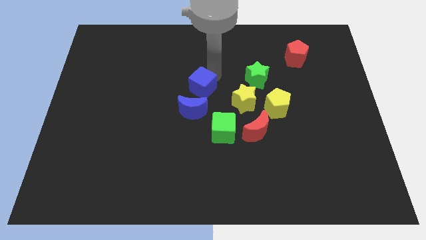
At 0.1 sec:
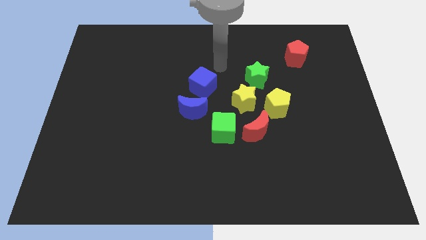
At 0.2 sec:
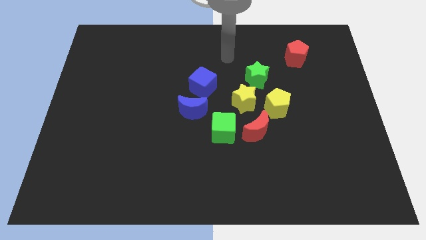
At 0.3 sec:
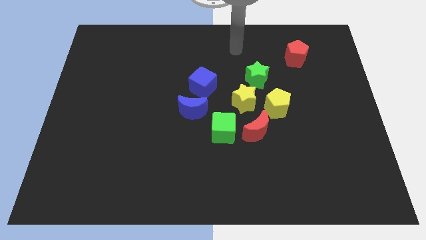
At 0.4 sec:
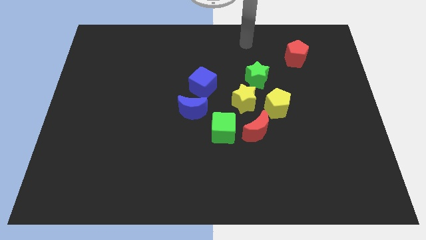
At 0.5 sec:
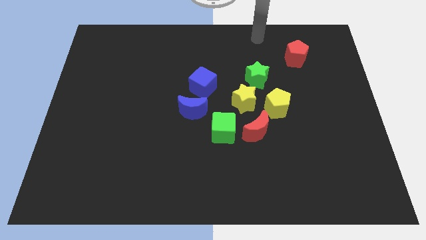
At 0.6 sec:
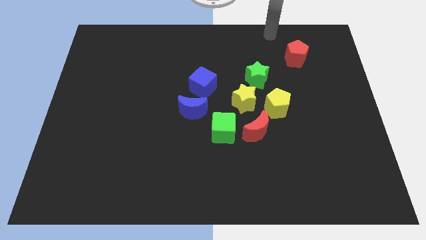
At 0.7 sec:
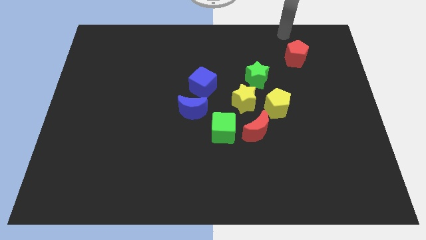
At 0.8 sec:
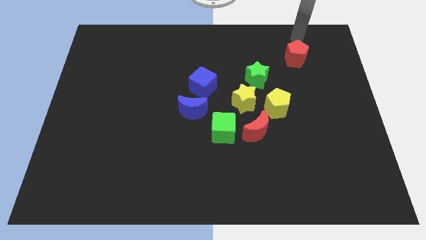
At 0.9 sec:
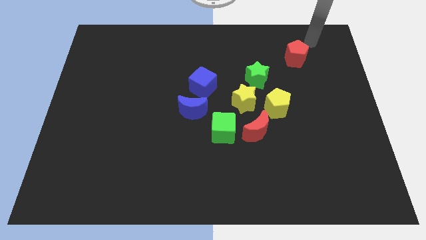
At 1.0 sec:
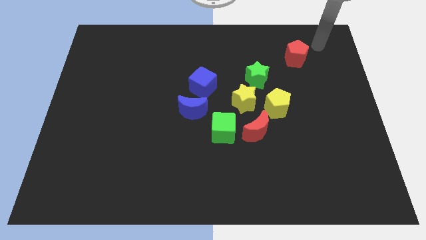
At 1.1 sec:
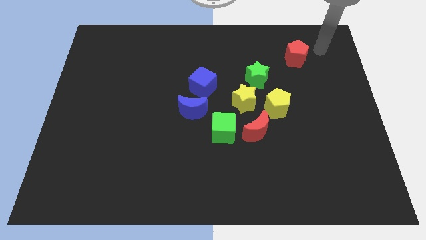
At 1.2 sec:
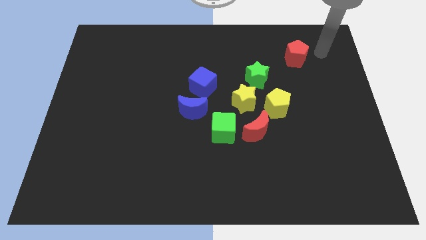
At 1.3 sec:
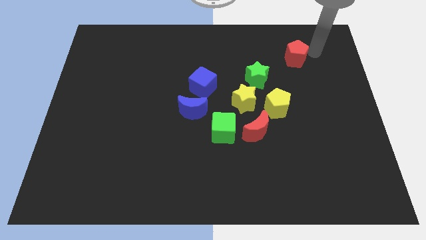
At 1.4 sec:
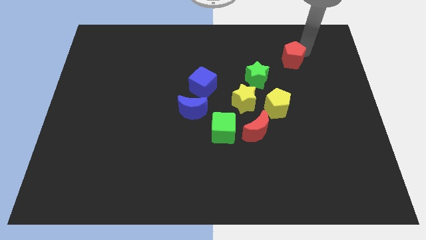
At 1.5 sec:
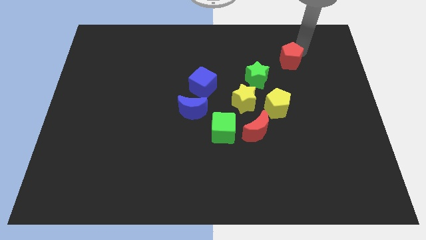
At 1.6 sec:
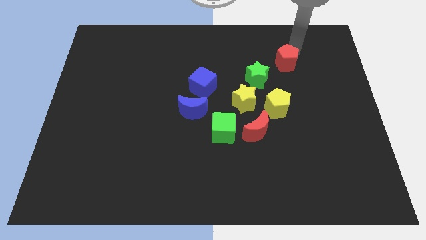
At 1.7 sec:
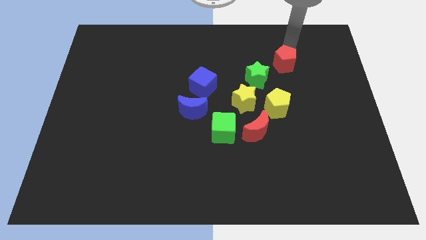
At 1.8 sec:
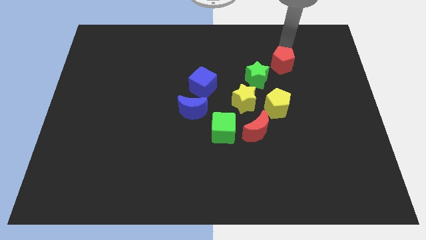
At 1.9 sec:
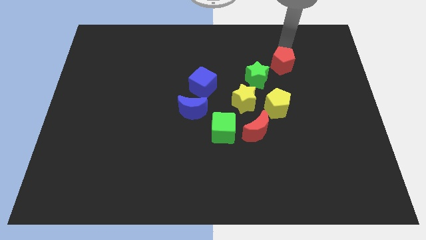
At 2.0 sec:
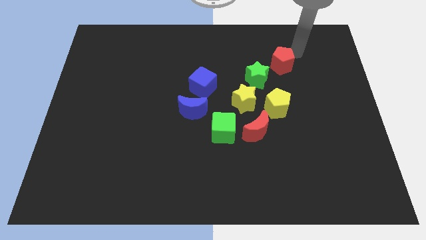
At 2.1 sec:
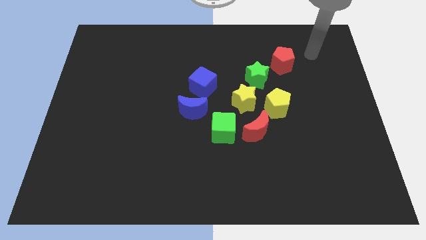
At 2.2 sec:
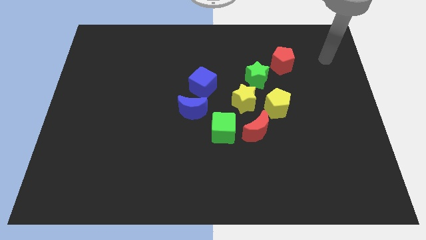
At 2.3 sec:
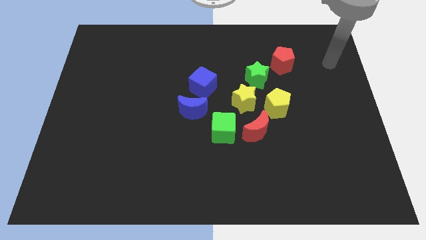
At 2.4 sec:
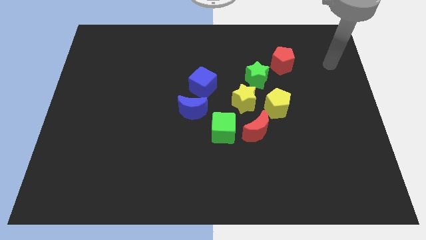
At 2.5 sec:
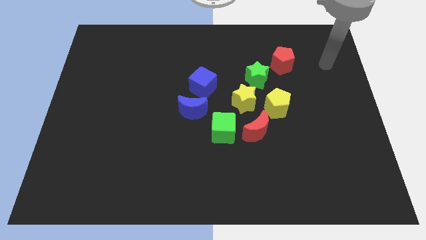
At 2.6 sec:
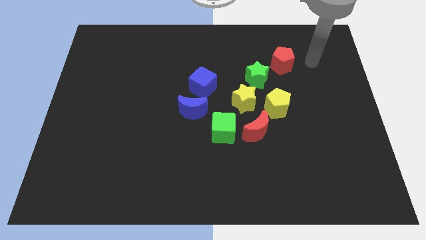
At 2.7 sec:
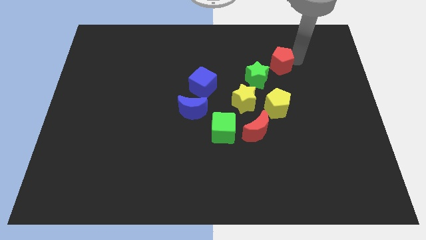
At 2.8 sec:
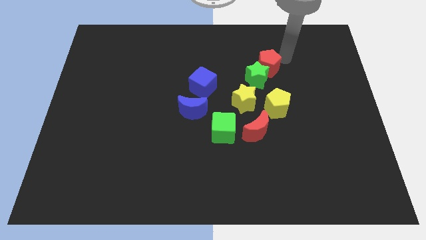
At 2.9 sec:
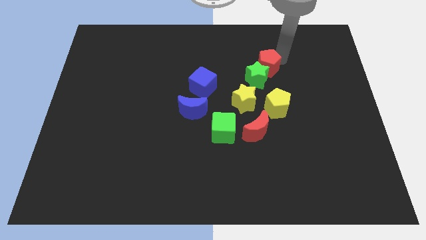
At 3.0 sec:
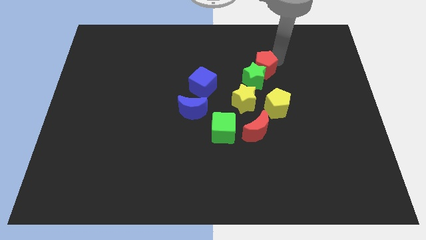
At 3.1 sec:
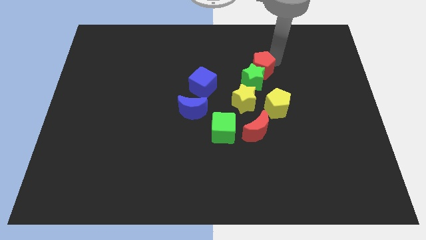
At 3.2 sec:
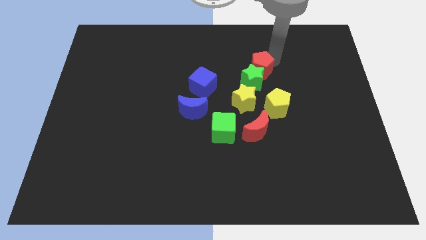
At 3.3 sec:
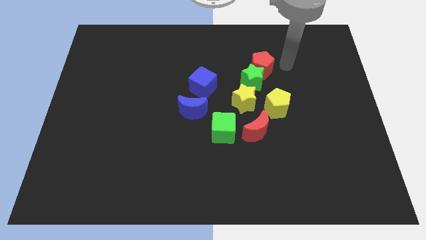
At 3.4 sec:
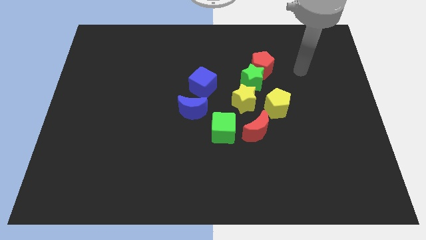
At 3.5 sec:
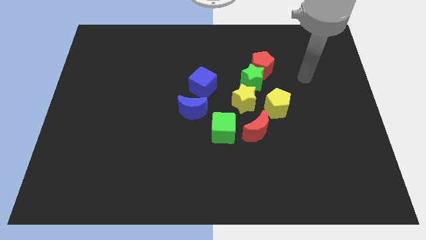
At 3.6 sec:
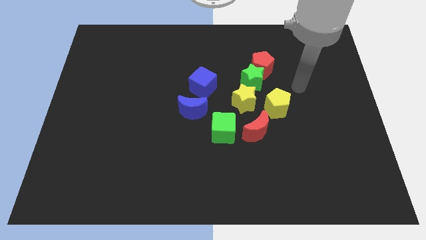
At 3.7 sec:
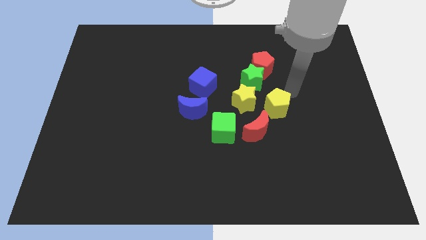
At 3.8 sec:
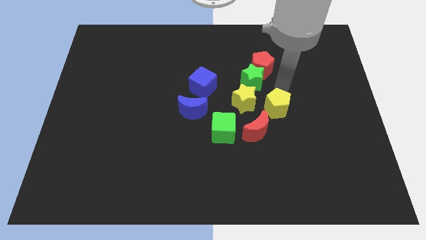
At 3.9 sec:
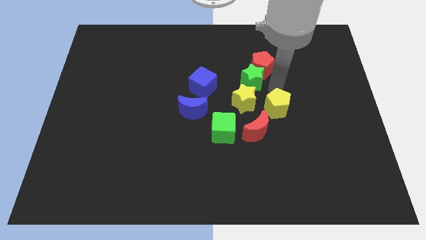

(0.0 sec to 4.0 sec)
push the red pentagon towards the green star

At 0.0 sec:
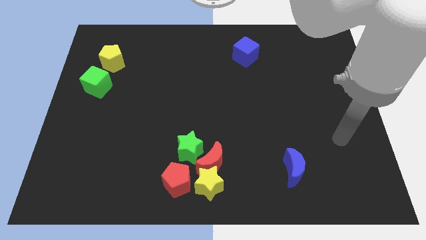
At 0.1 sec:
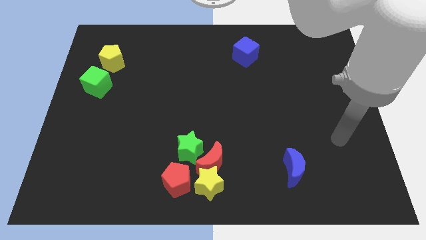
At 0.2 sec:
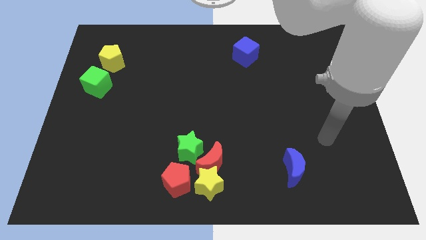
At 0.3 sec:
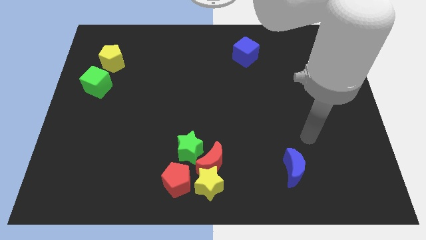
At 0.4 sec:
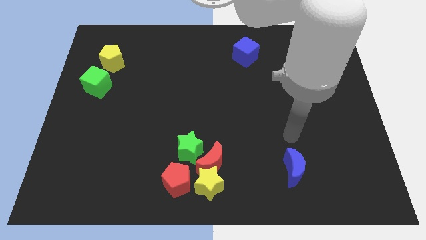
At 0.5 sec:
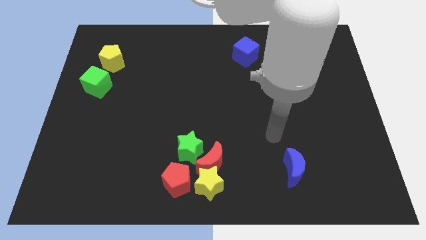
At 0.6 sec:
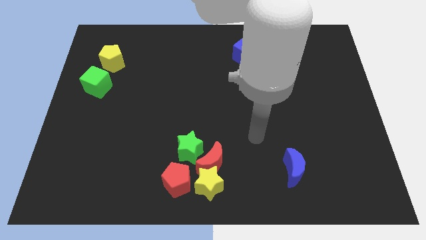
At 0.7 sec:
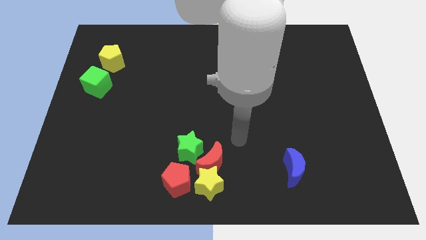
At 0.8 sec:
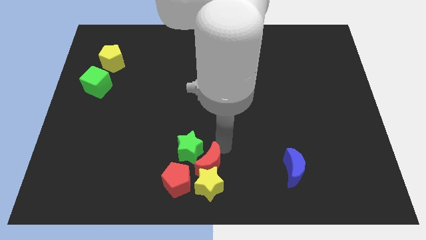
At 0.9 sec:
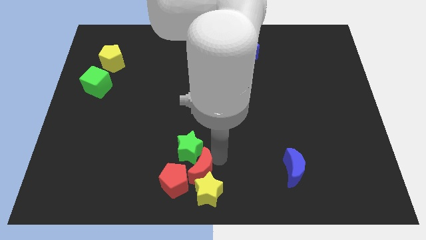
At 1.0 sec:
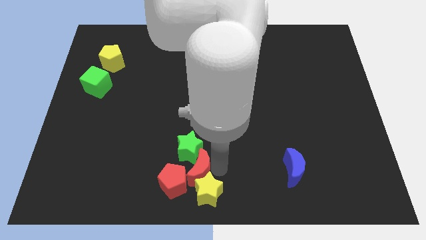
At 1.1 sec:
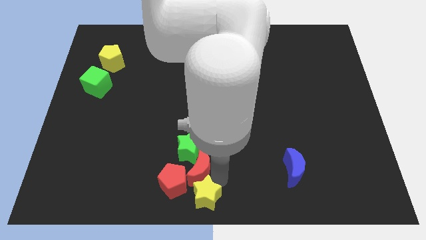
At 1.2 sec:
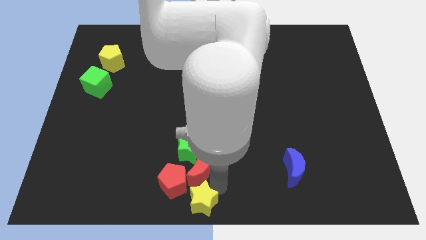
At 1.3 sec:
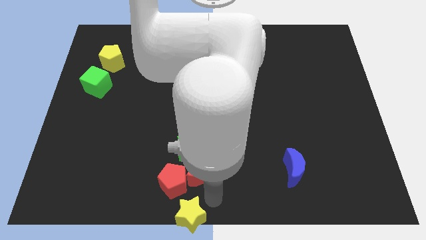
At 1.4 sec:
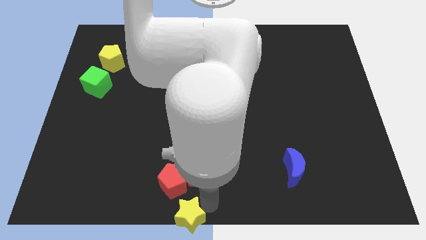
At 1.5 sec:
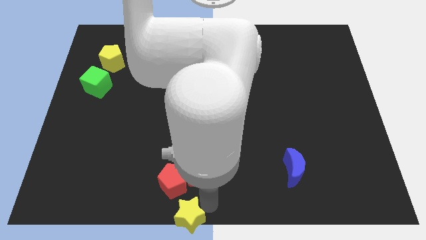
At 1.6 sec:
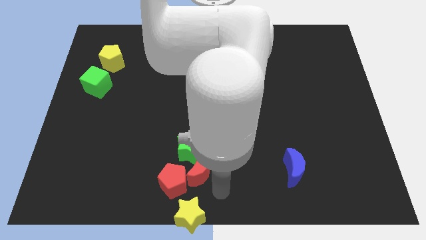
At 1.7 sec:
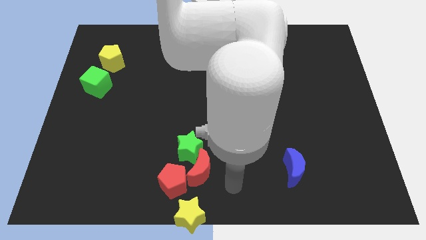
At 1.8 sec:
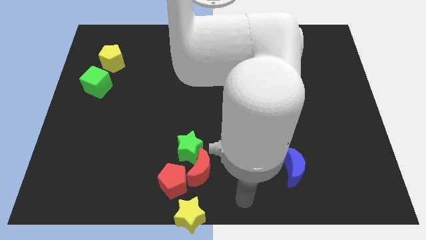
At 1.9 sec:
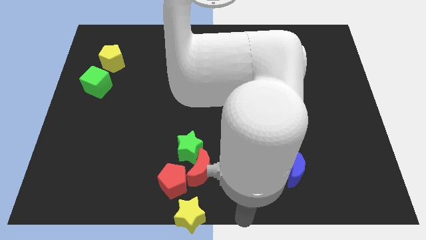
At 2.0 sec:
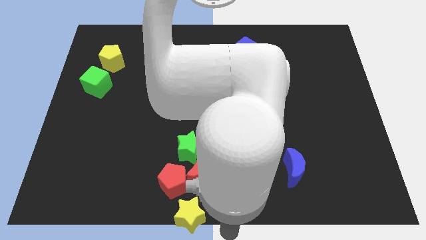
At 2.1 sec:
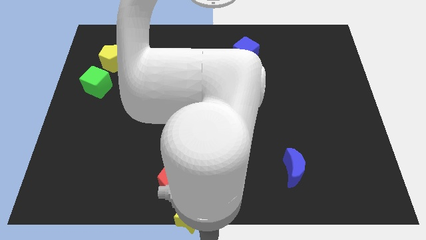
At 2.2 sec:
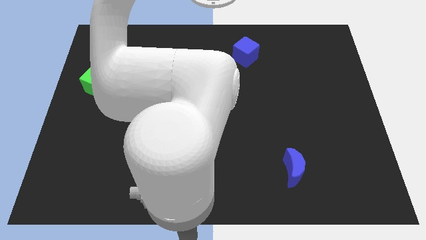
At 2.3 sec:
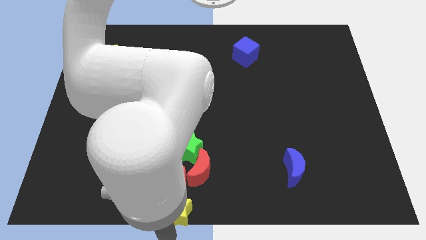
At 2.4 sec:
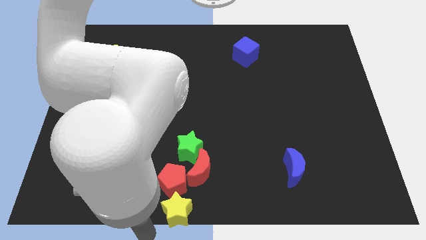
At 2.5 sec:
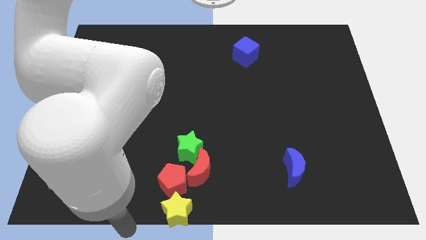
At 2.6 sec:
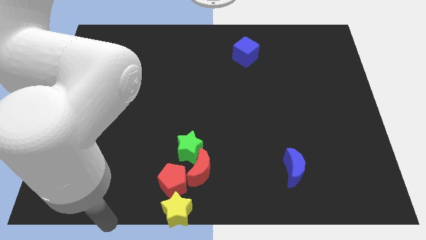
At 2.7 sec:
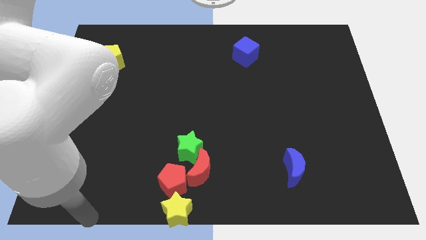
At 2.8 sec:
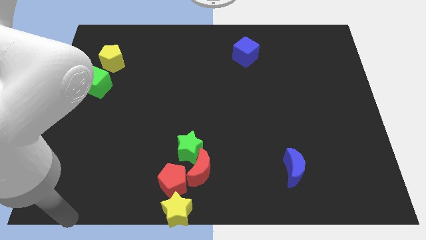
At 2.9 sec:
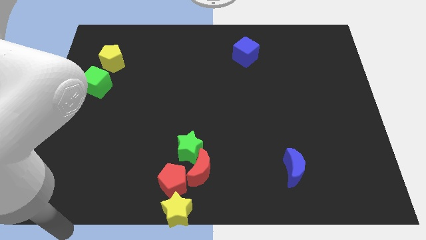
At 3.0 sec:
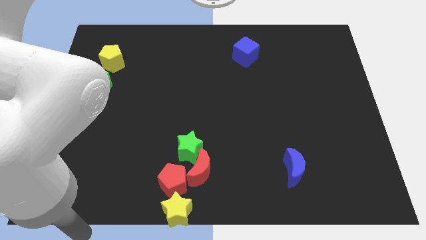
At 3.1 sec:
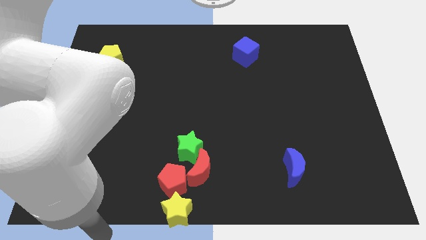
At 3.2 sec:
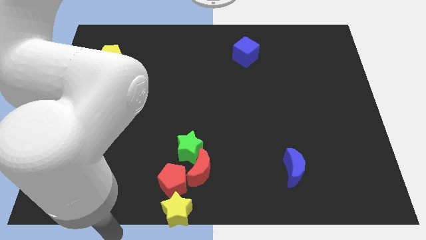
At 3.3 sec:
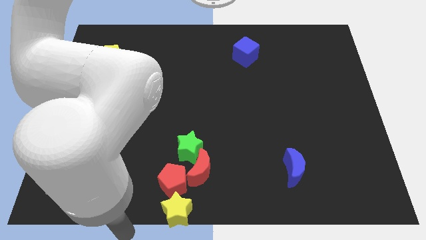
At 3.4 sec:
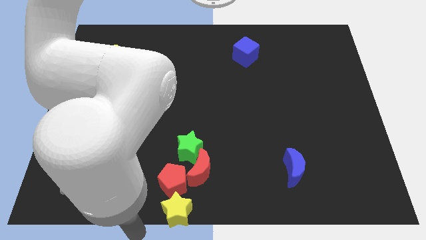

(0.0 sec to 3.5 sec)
push yellow star downwards

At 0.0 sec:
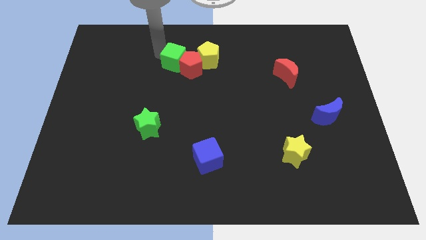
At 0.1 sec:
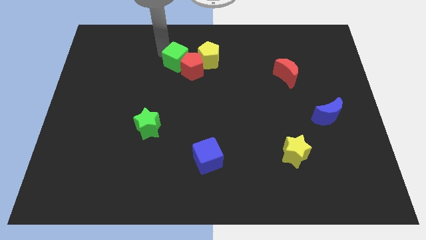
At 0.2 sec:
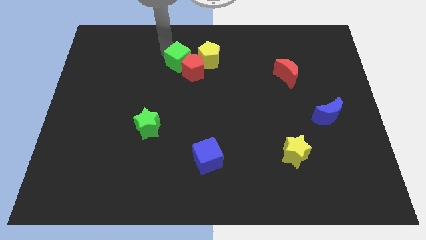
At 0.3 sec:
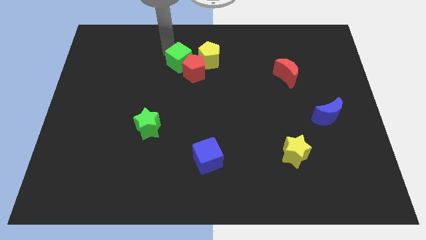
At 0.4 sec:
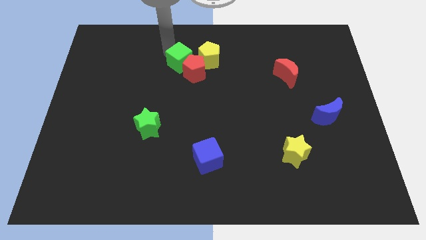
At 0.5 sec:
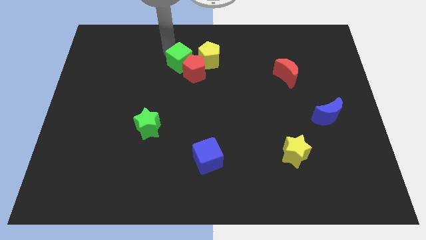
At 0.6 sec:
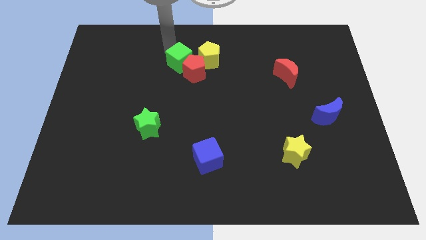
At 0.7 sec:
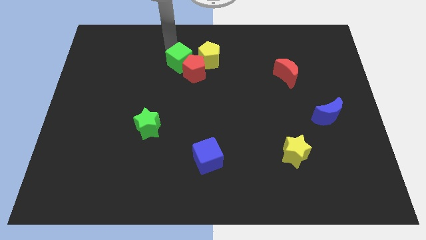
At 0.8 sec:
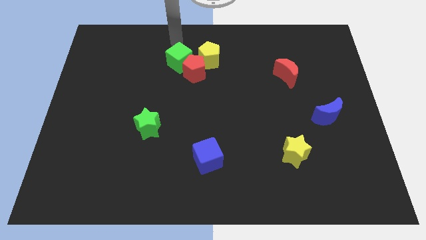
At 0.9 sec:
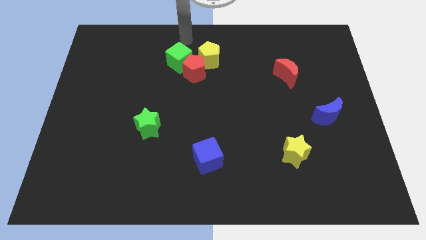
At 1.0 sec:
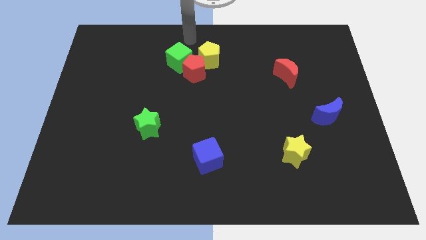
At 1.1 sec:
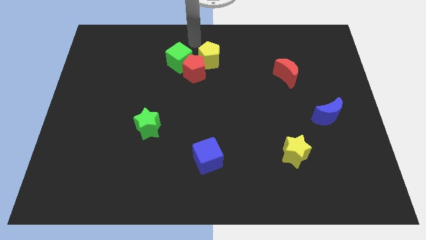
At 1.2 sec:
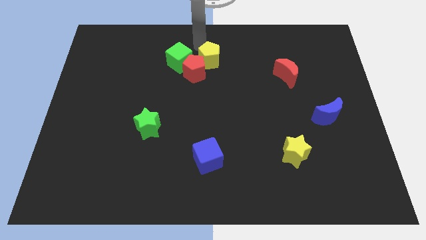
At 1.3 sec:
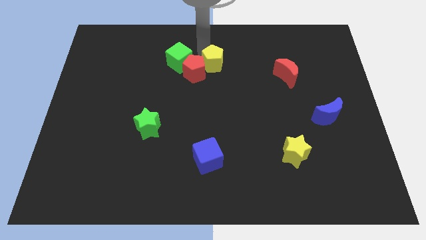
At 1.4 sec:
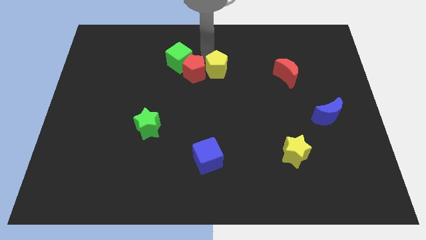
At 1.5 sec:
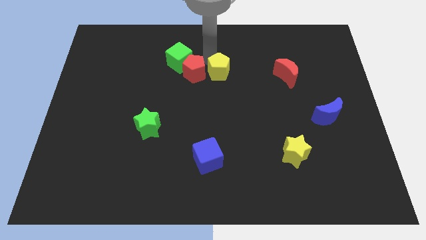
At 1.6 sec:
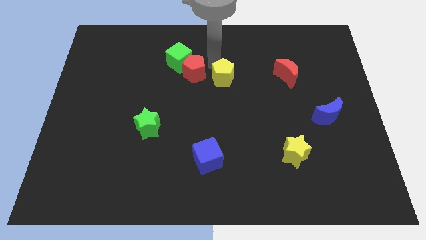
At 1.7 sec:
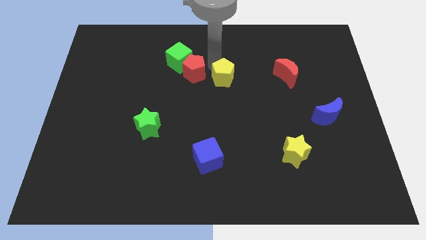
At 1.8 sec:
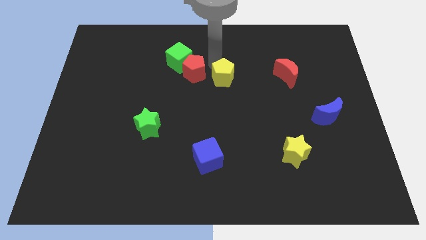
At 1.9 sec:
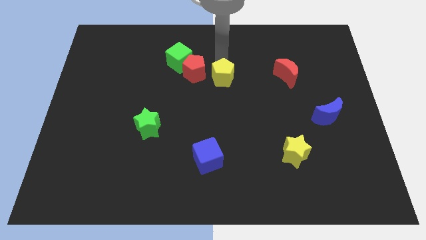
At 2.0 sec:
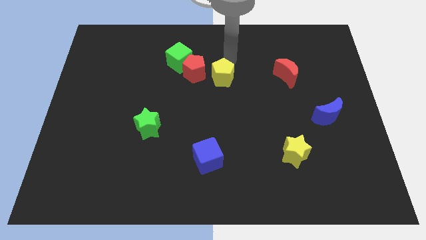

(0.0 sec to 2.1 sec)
place the yellow pentagon on the right side of the red pentagon
